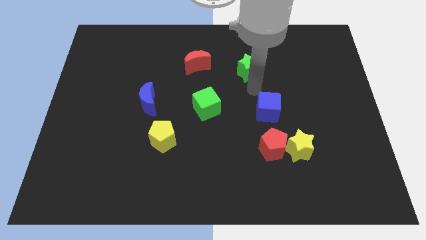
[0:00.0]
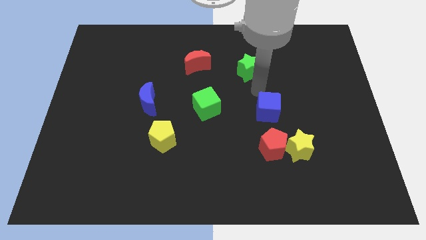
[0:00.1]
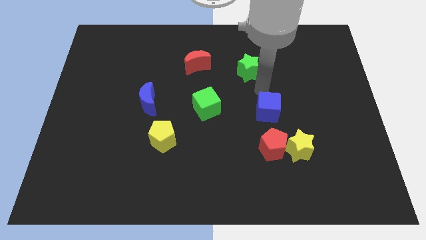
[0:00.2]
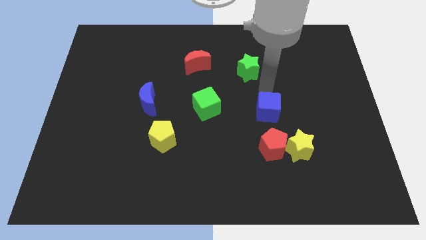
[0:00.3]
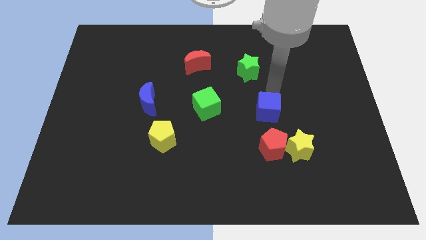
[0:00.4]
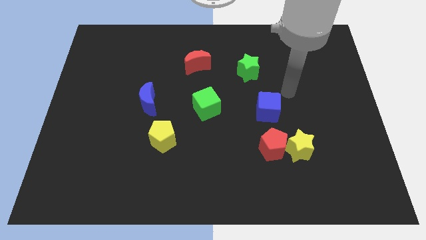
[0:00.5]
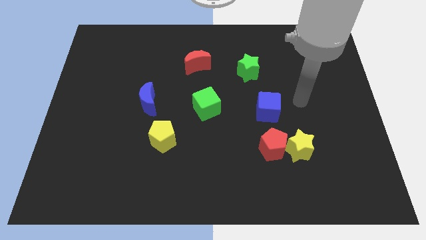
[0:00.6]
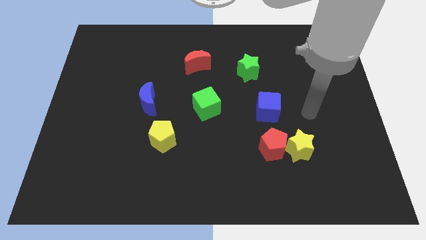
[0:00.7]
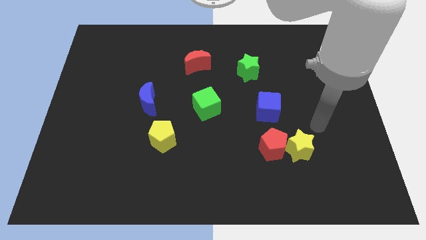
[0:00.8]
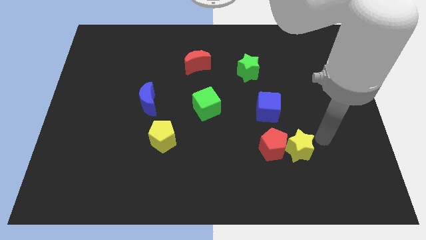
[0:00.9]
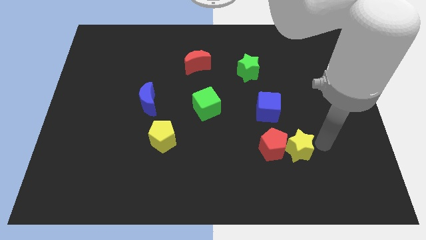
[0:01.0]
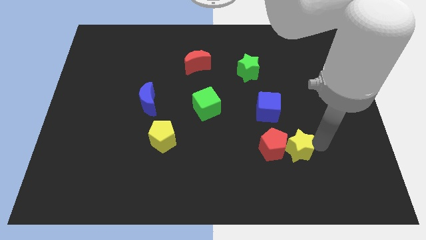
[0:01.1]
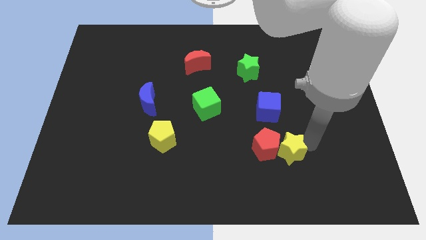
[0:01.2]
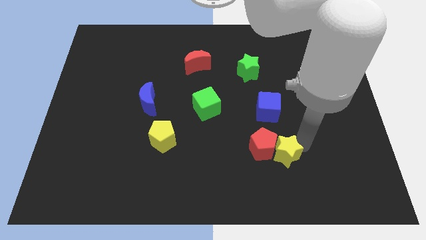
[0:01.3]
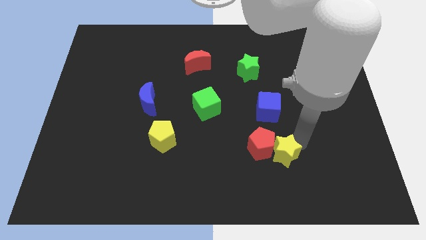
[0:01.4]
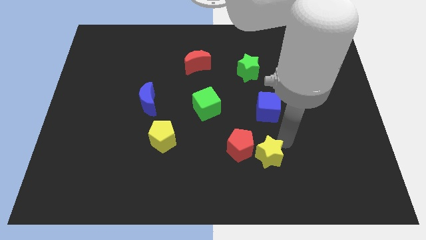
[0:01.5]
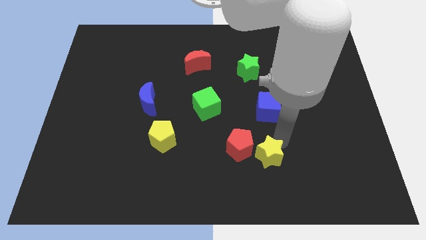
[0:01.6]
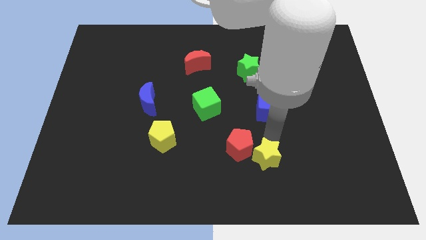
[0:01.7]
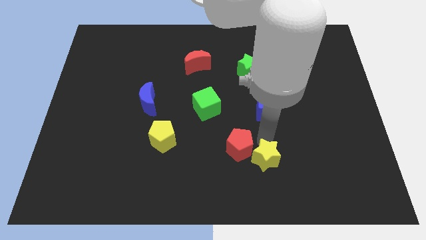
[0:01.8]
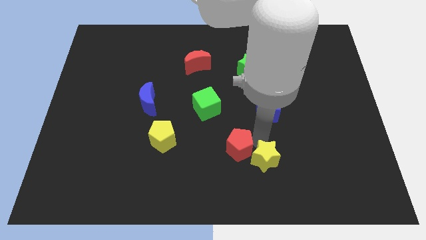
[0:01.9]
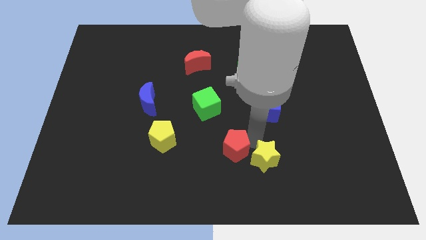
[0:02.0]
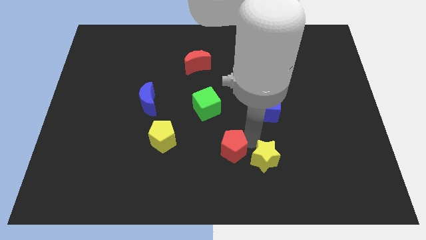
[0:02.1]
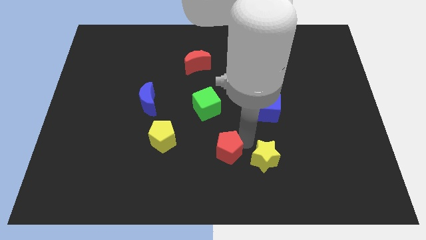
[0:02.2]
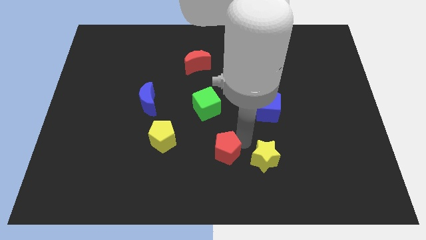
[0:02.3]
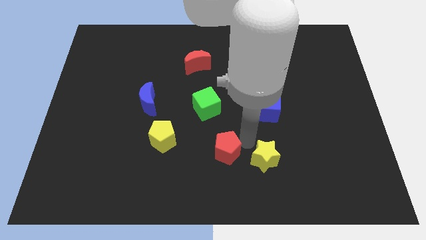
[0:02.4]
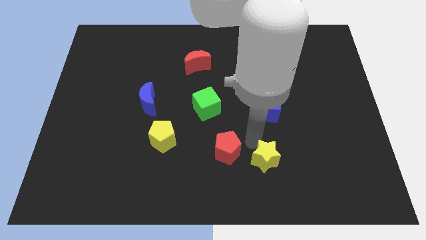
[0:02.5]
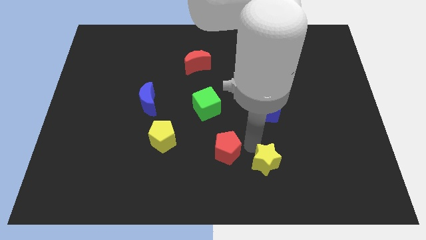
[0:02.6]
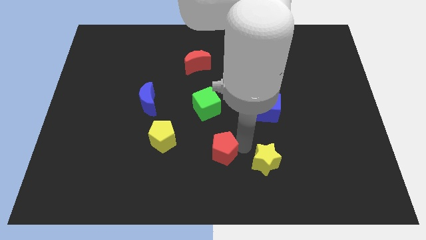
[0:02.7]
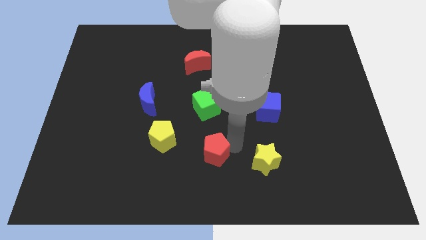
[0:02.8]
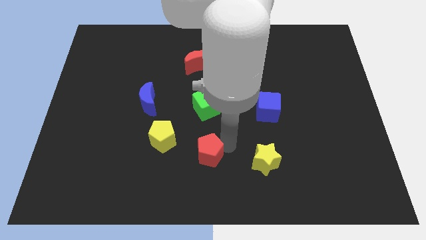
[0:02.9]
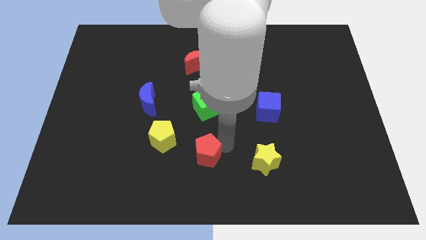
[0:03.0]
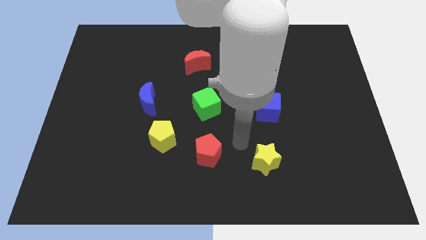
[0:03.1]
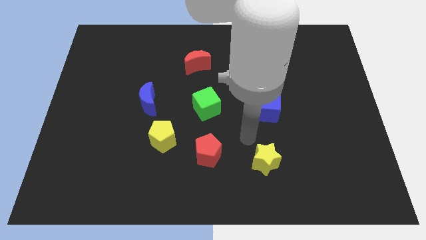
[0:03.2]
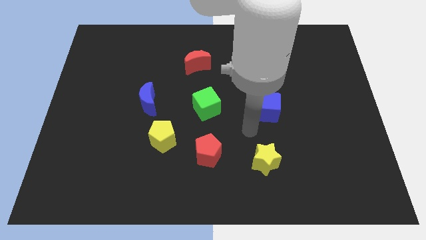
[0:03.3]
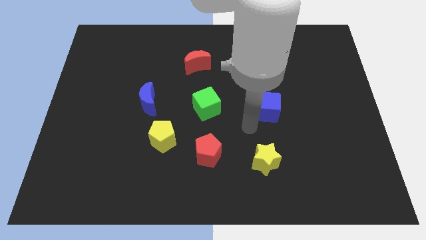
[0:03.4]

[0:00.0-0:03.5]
separate the red pentagon and yellow star

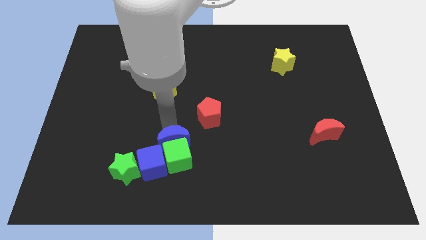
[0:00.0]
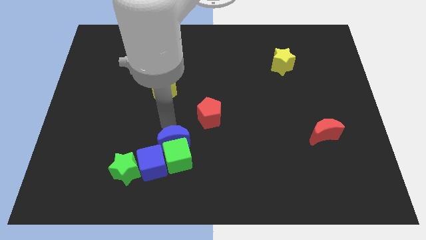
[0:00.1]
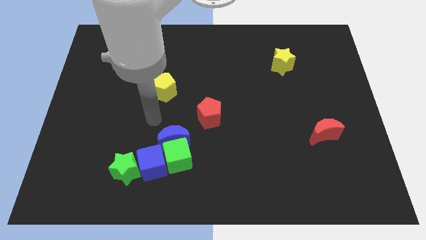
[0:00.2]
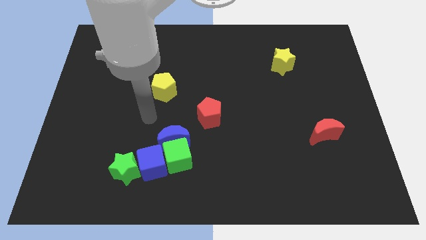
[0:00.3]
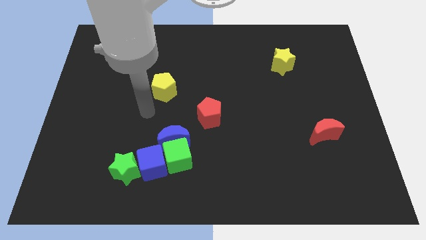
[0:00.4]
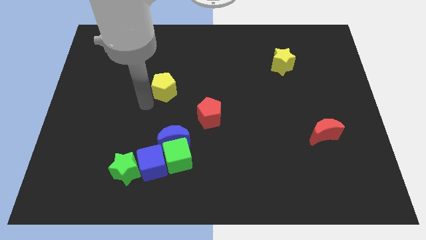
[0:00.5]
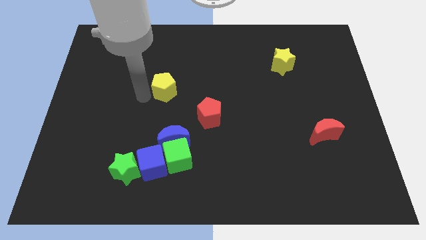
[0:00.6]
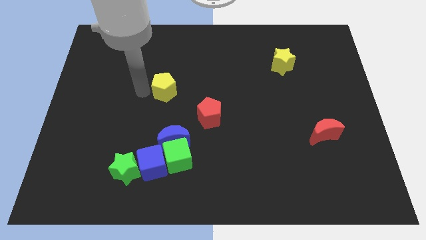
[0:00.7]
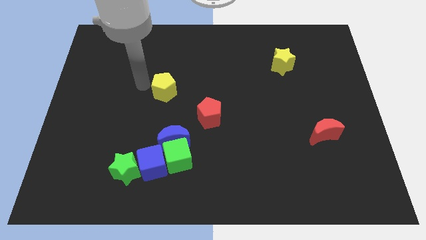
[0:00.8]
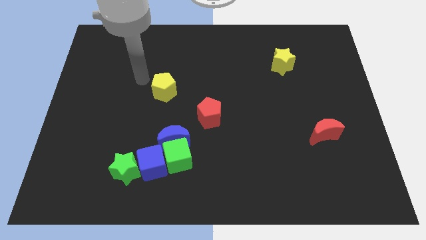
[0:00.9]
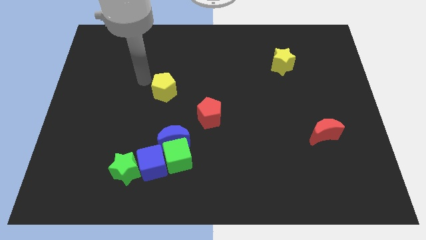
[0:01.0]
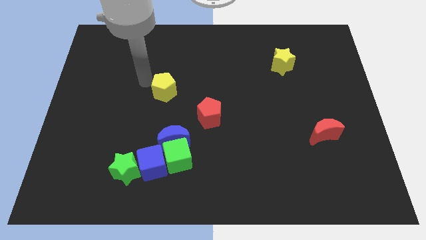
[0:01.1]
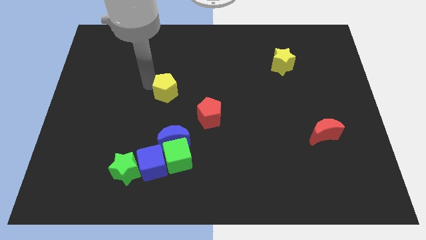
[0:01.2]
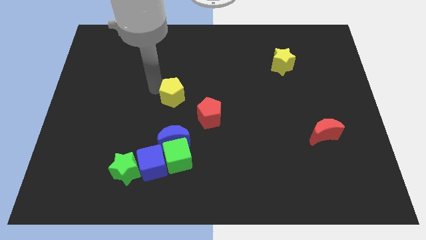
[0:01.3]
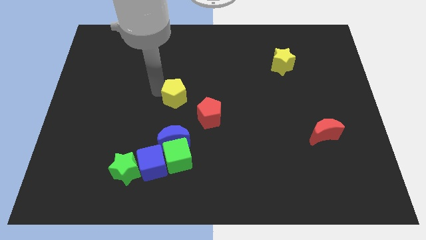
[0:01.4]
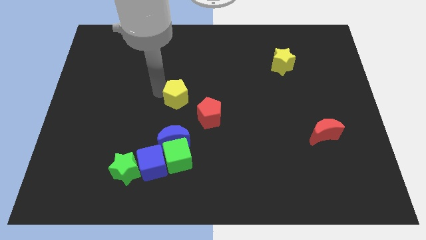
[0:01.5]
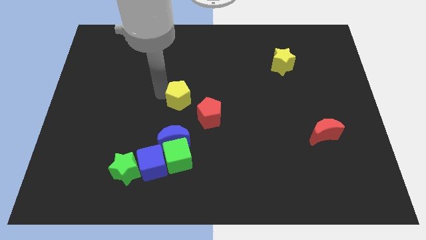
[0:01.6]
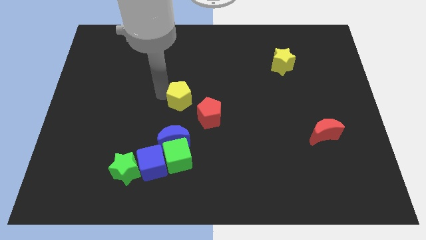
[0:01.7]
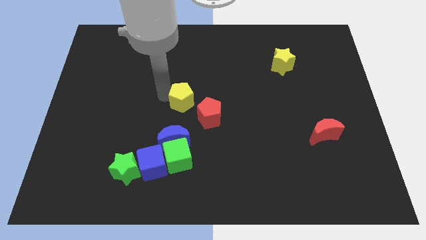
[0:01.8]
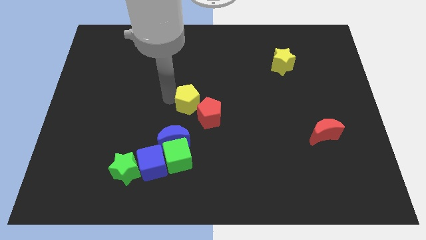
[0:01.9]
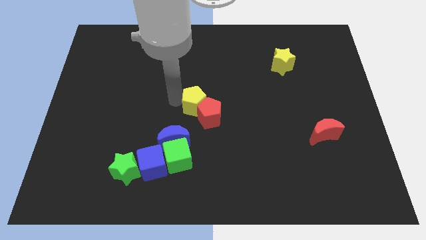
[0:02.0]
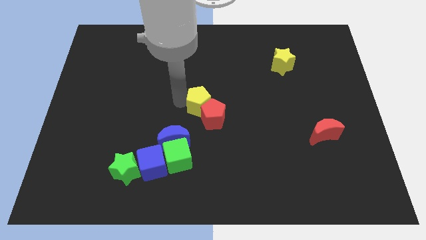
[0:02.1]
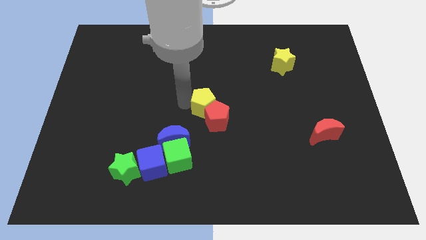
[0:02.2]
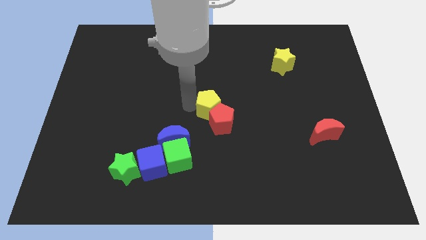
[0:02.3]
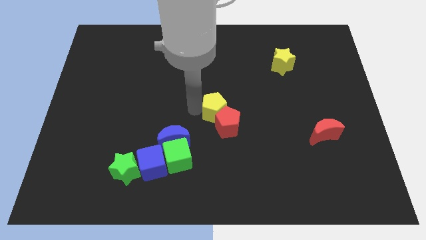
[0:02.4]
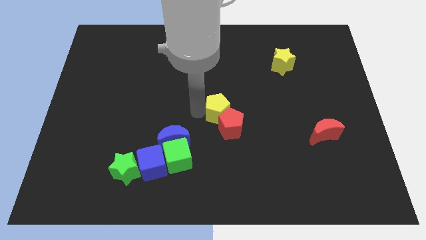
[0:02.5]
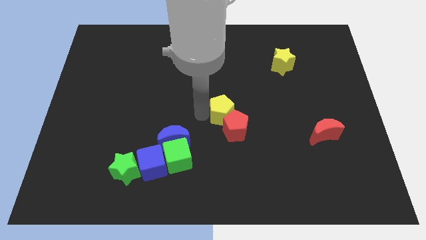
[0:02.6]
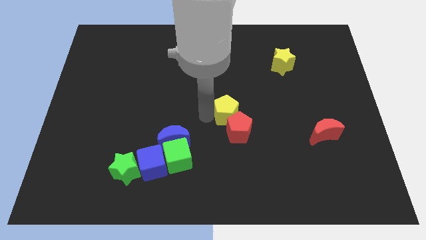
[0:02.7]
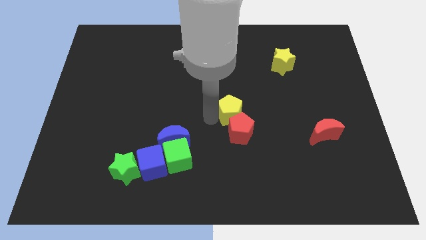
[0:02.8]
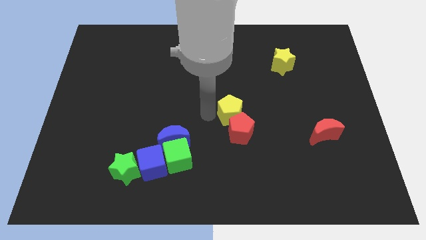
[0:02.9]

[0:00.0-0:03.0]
push the pentagons towards the bottom side of the board

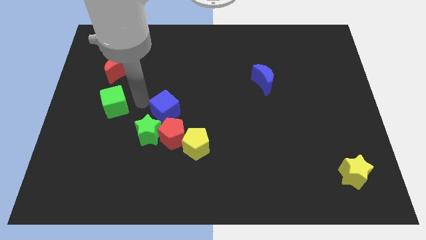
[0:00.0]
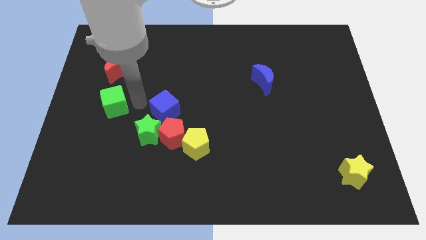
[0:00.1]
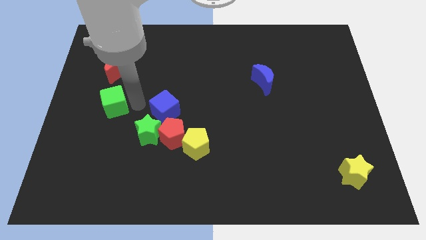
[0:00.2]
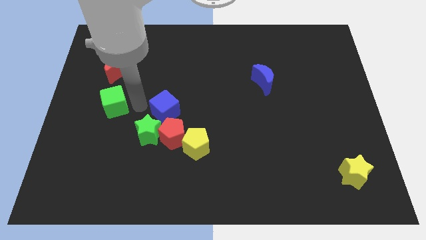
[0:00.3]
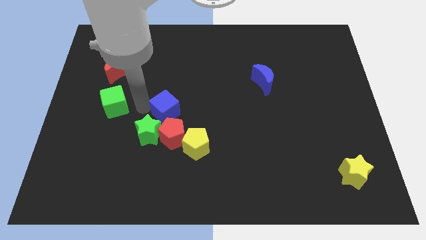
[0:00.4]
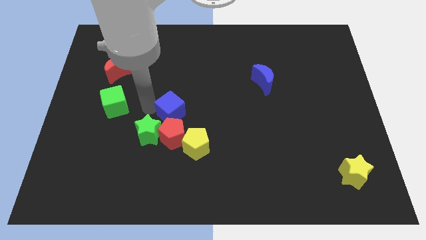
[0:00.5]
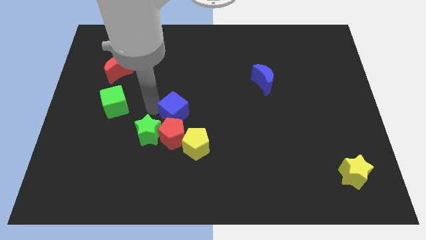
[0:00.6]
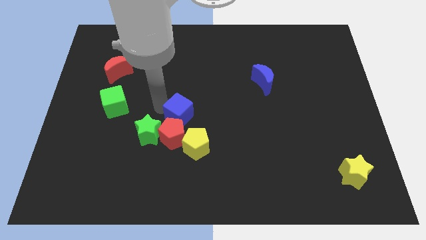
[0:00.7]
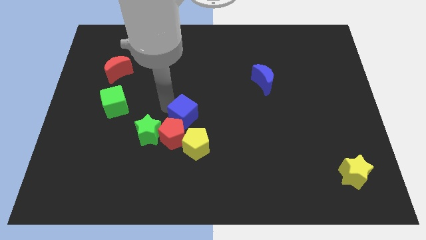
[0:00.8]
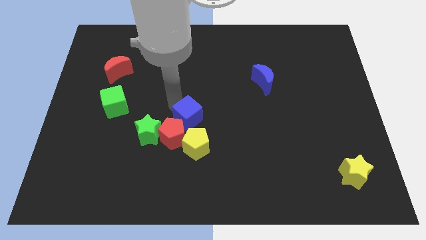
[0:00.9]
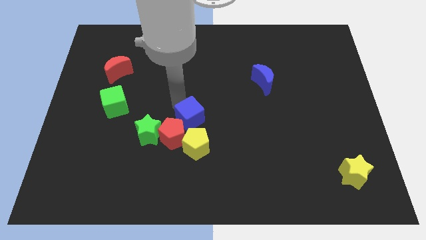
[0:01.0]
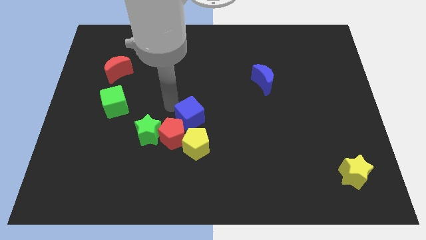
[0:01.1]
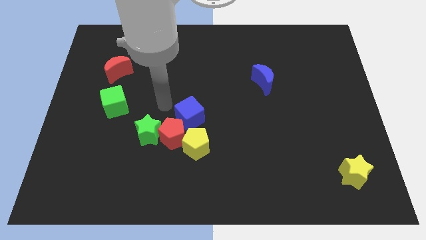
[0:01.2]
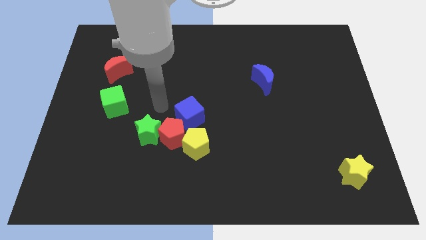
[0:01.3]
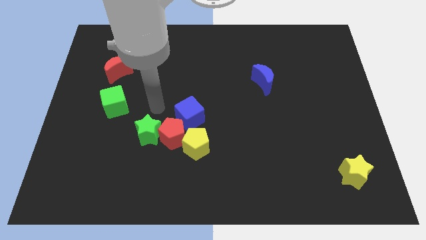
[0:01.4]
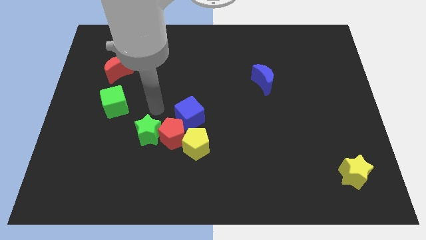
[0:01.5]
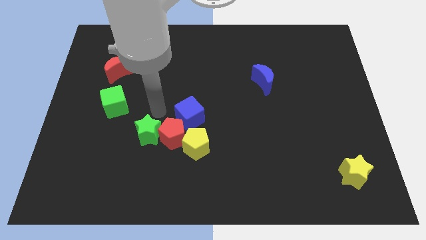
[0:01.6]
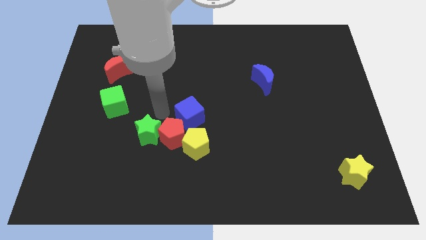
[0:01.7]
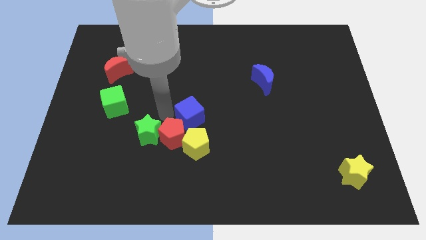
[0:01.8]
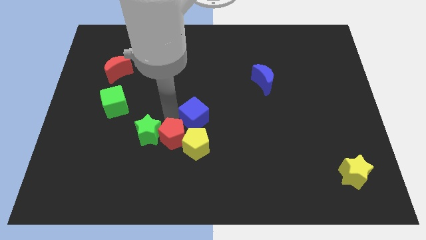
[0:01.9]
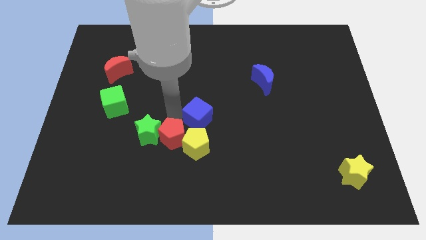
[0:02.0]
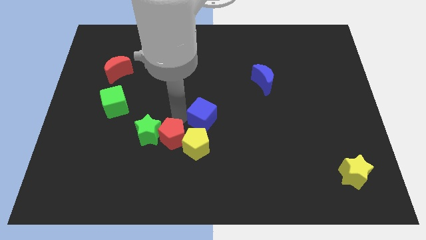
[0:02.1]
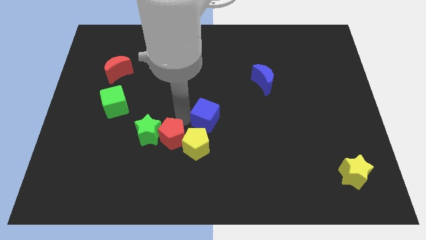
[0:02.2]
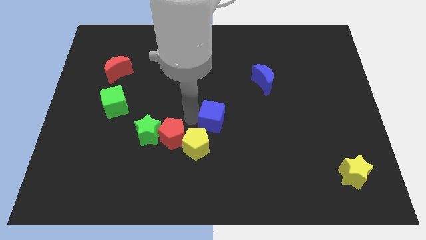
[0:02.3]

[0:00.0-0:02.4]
place the blue cube above the yellow pentagon
